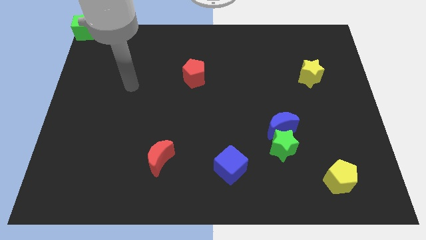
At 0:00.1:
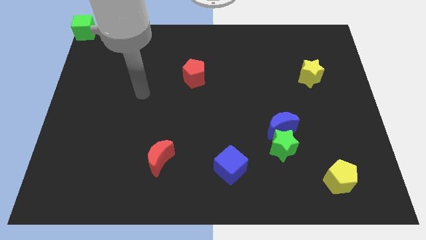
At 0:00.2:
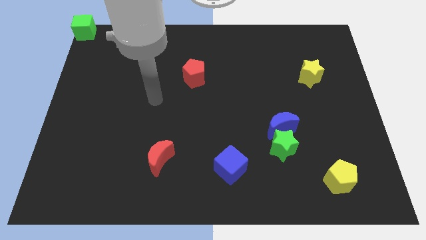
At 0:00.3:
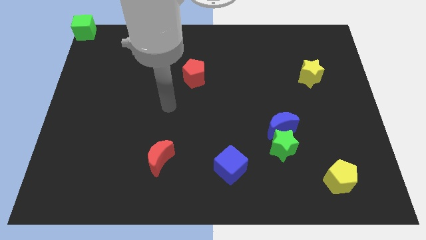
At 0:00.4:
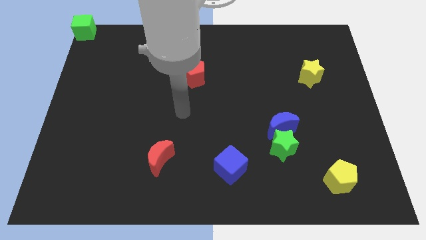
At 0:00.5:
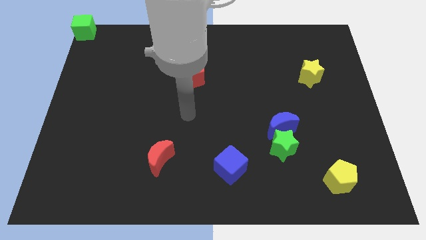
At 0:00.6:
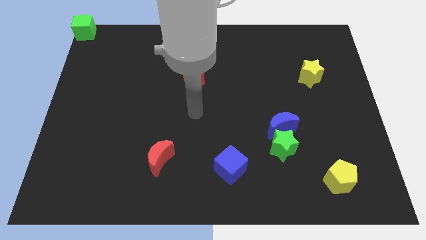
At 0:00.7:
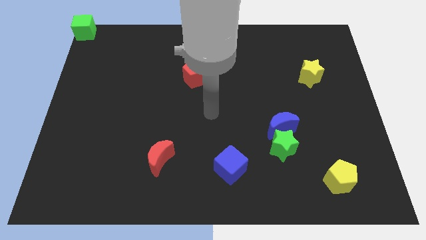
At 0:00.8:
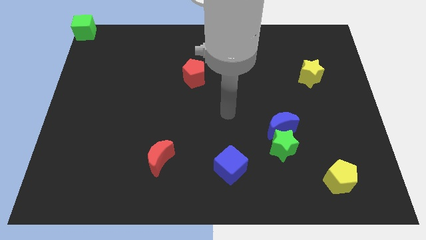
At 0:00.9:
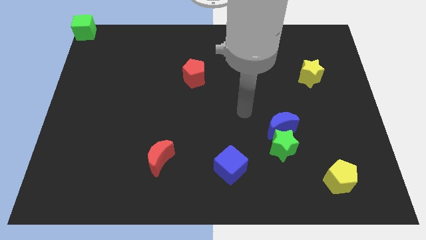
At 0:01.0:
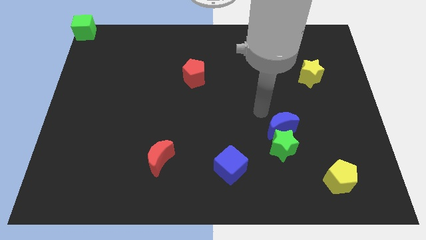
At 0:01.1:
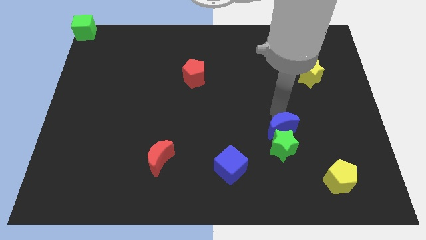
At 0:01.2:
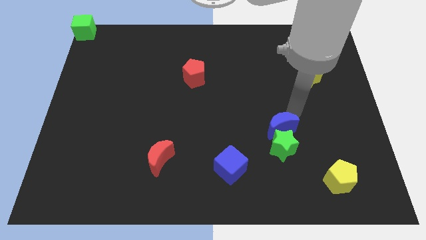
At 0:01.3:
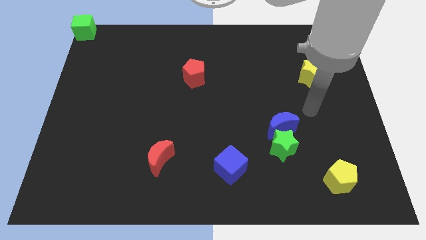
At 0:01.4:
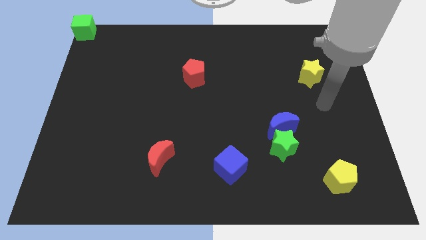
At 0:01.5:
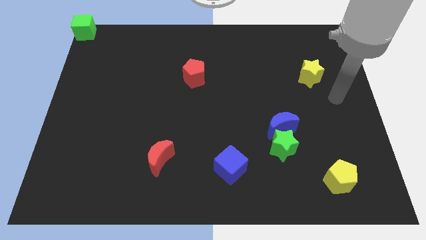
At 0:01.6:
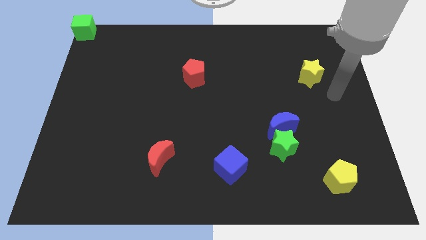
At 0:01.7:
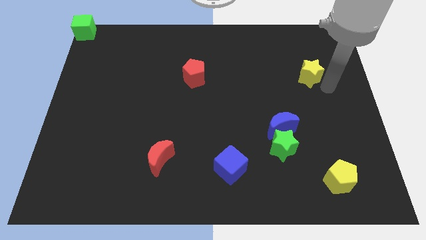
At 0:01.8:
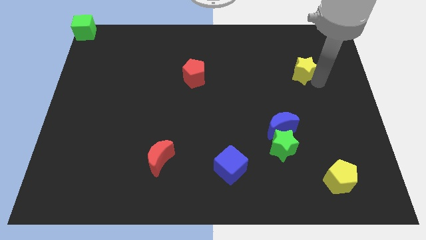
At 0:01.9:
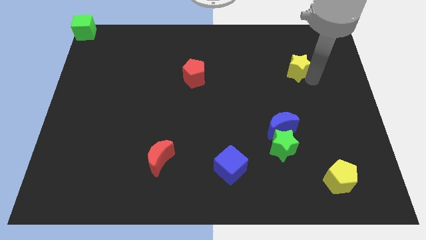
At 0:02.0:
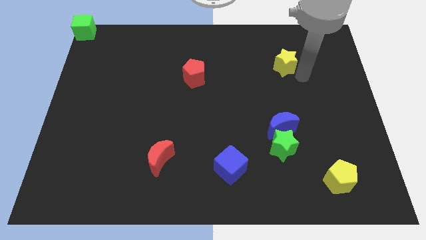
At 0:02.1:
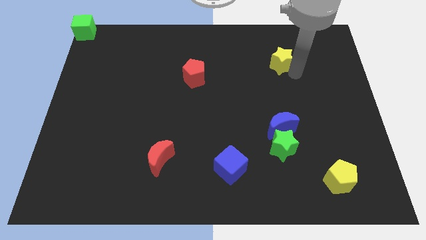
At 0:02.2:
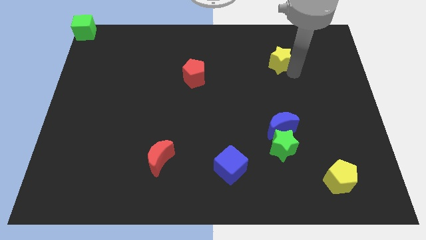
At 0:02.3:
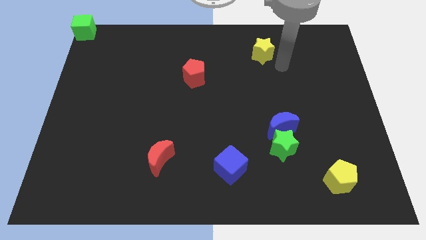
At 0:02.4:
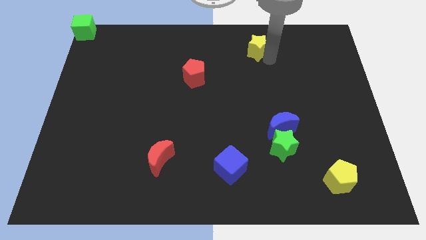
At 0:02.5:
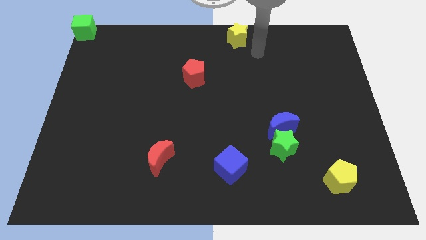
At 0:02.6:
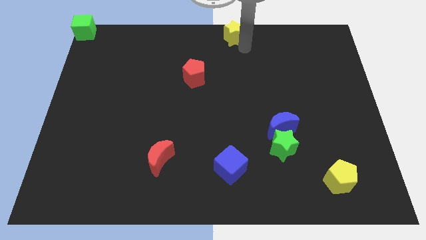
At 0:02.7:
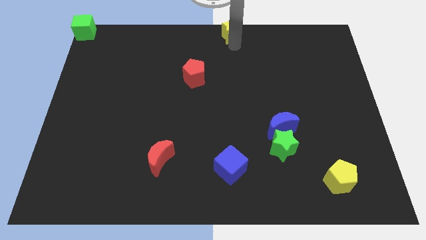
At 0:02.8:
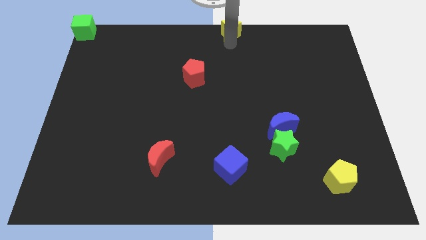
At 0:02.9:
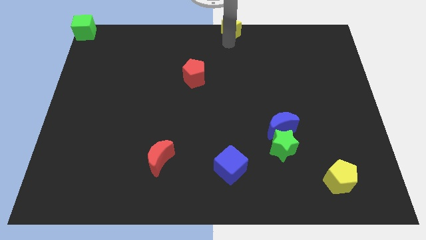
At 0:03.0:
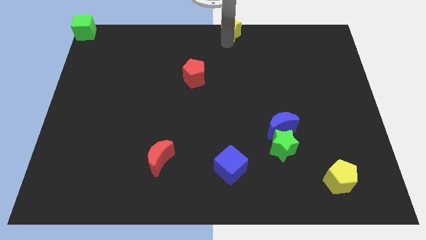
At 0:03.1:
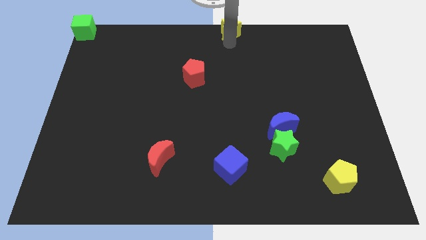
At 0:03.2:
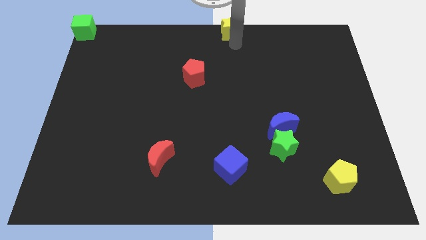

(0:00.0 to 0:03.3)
put the yellow star at the center top

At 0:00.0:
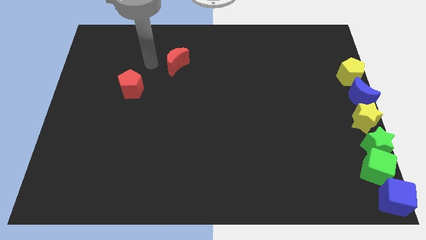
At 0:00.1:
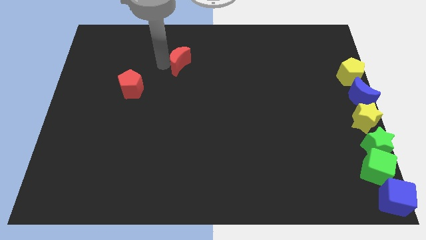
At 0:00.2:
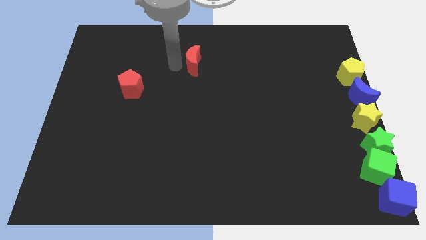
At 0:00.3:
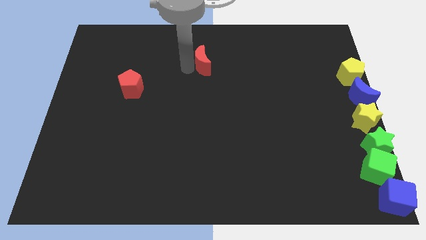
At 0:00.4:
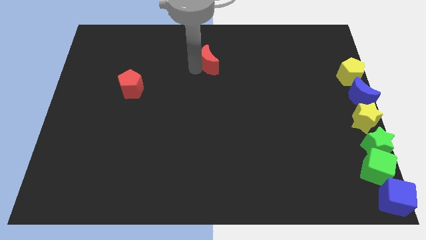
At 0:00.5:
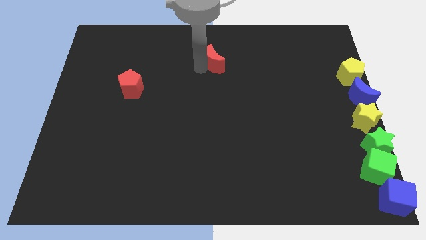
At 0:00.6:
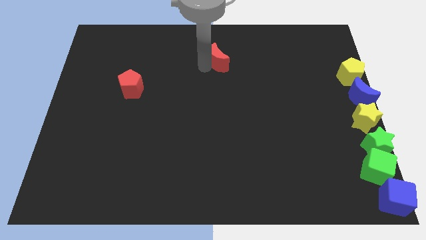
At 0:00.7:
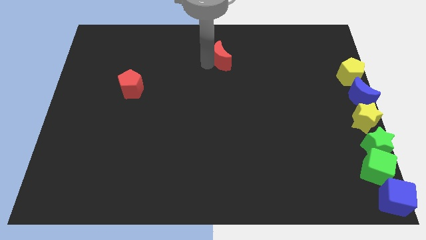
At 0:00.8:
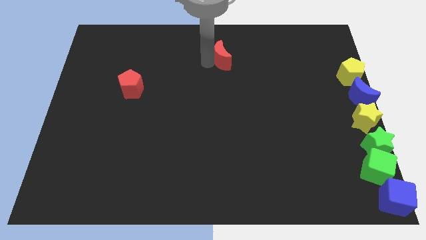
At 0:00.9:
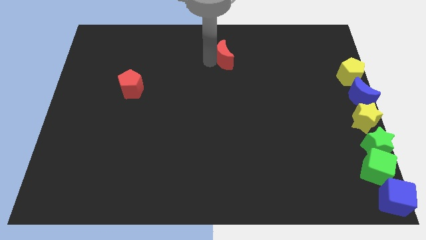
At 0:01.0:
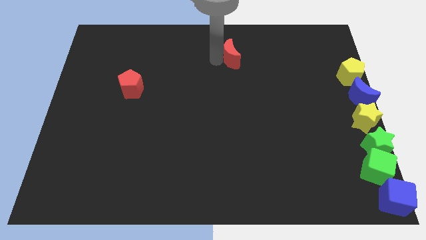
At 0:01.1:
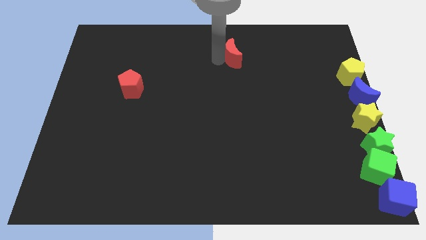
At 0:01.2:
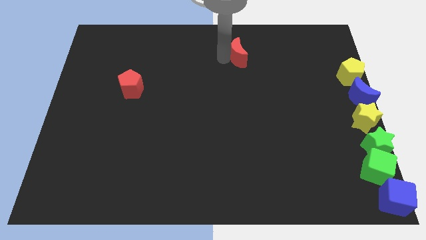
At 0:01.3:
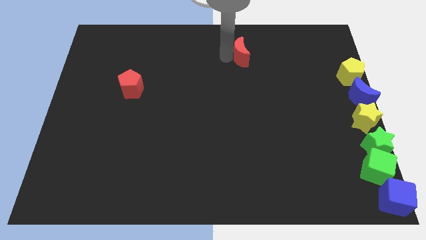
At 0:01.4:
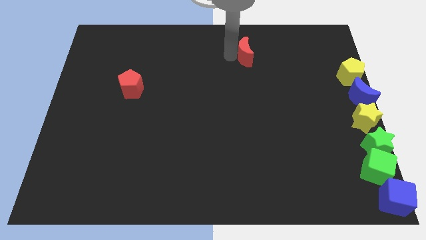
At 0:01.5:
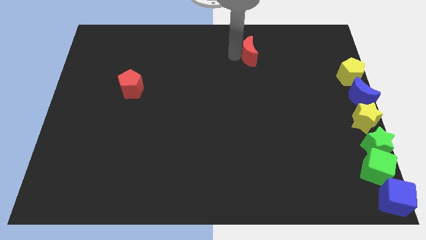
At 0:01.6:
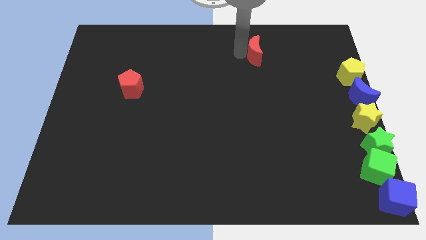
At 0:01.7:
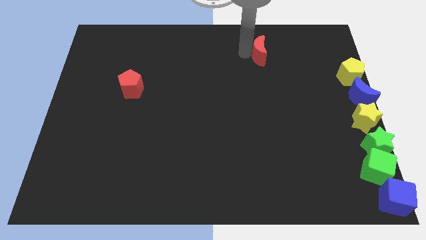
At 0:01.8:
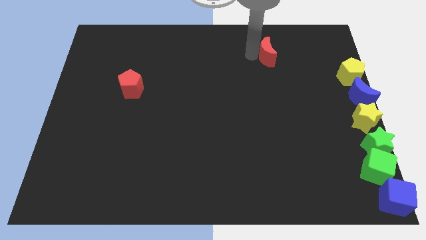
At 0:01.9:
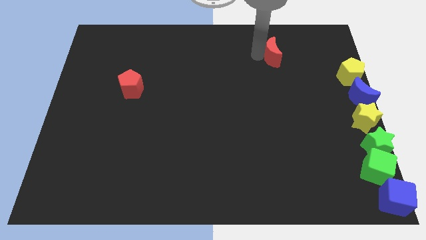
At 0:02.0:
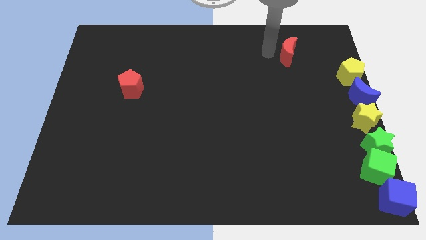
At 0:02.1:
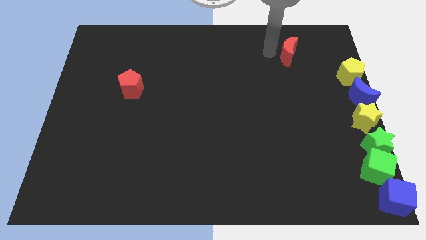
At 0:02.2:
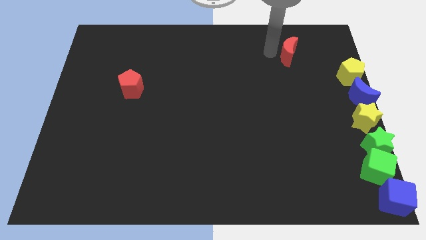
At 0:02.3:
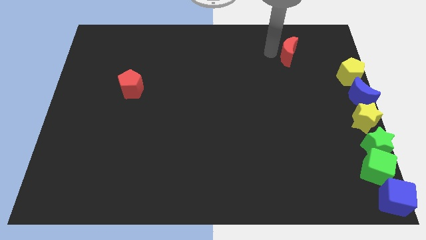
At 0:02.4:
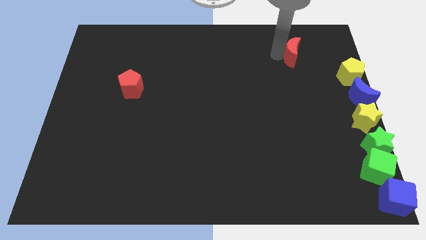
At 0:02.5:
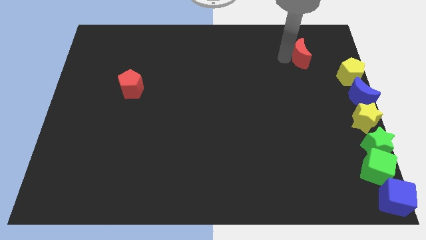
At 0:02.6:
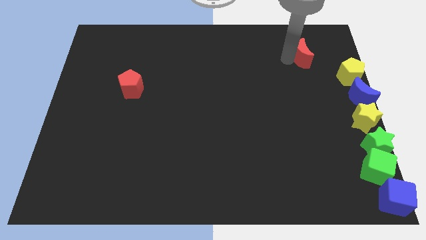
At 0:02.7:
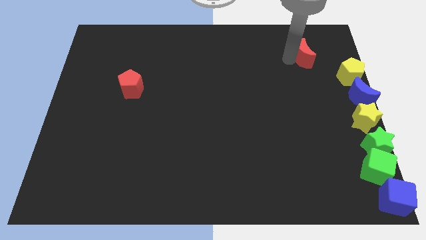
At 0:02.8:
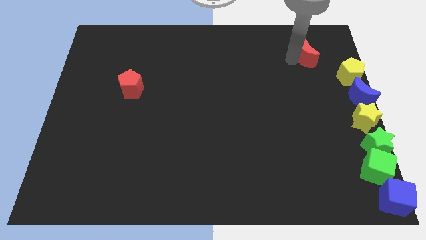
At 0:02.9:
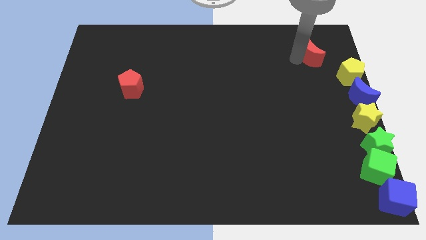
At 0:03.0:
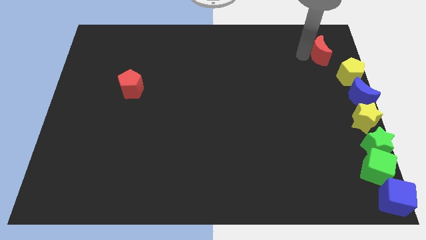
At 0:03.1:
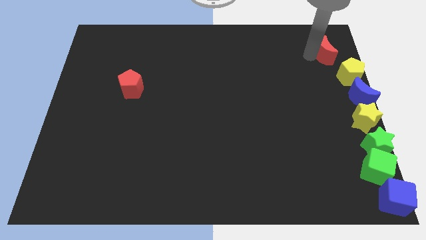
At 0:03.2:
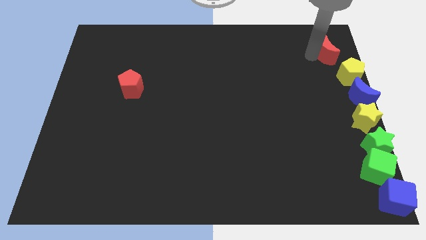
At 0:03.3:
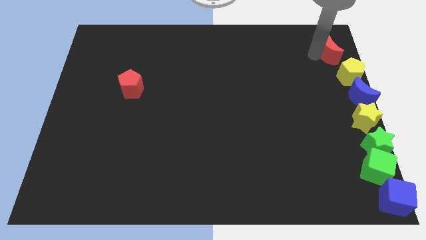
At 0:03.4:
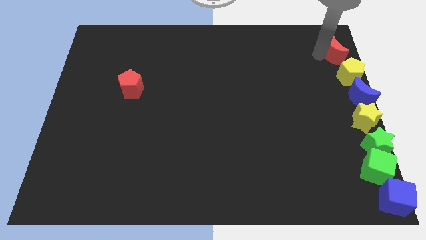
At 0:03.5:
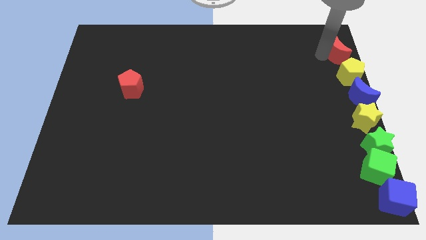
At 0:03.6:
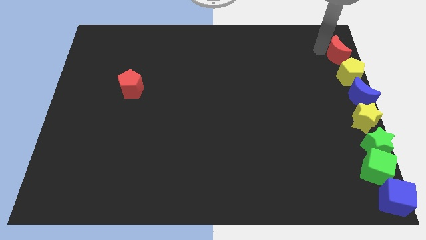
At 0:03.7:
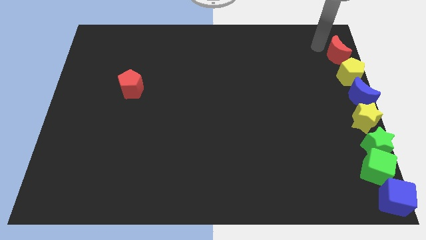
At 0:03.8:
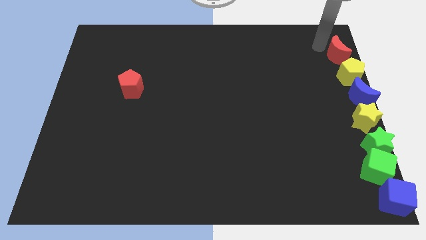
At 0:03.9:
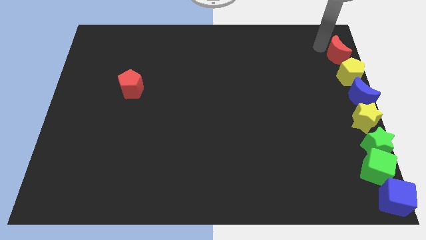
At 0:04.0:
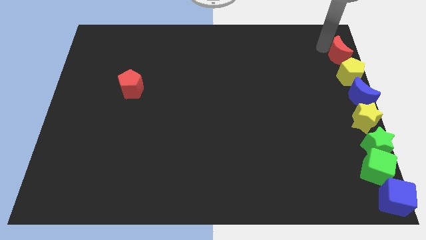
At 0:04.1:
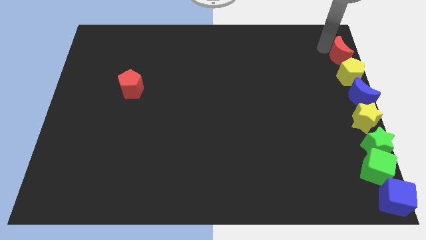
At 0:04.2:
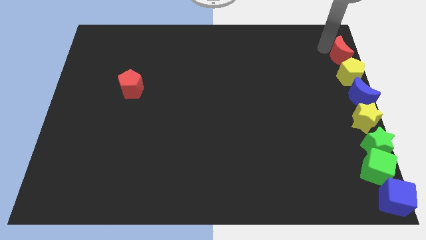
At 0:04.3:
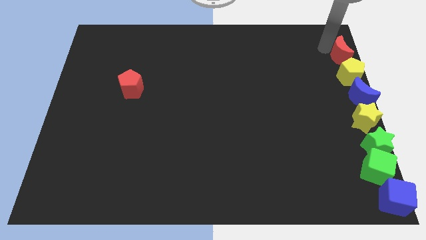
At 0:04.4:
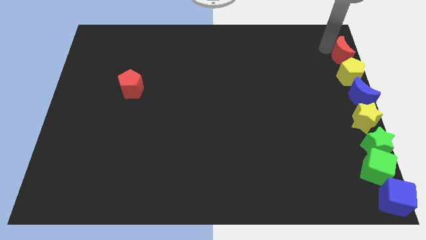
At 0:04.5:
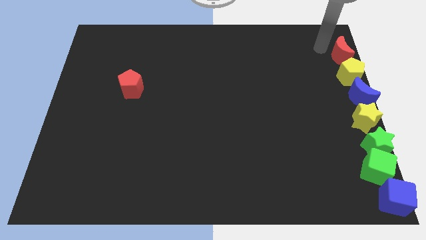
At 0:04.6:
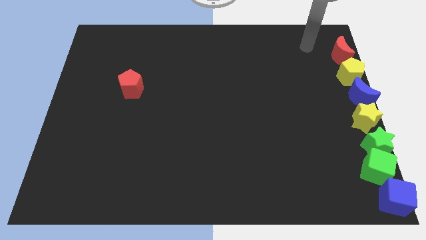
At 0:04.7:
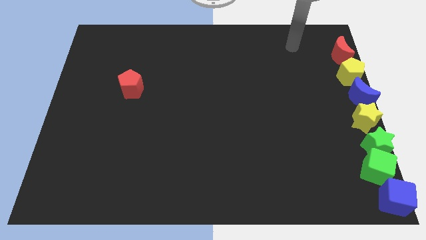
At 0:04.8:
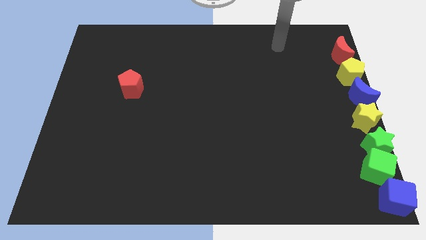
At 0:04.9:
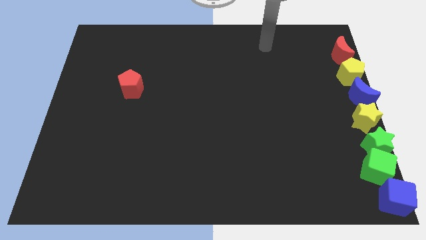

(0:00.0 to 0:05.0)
move the red moon to the top of the yellow pentagon

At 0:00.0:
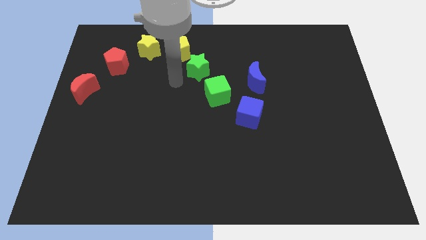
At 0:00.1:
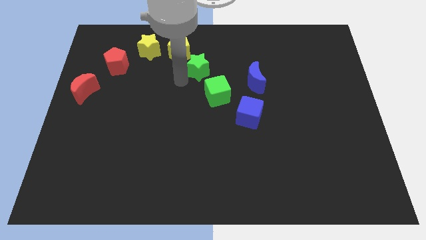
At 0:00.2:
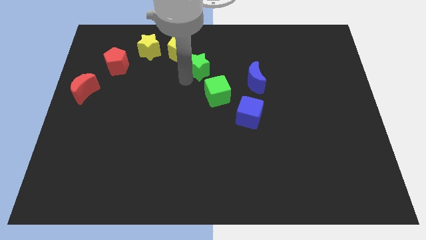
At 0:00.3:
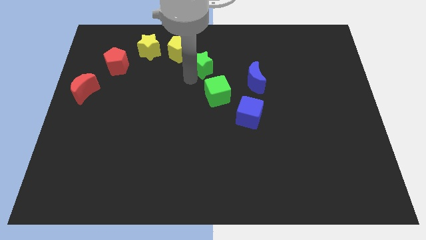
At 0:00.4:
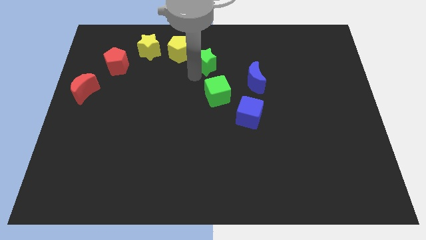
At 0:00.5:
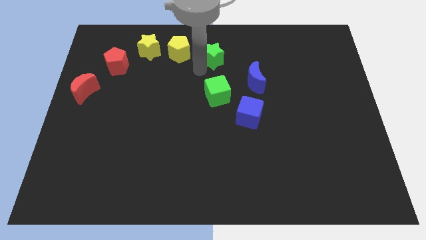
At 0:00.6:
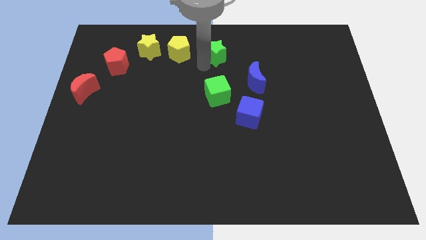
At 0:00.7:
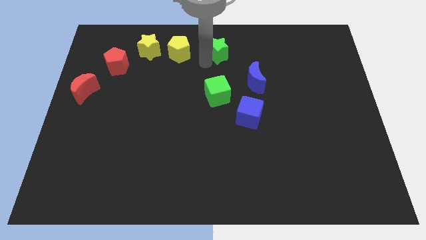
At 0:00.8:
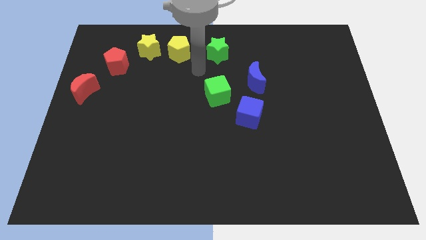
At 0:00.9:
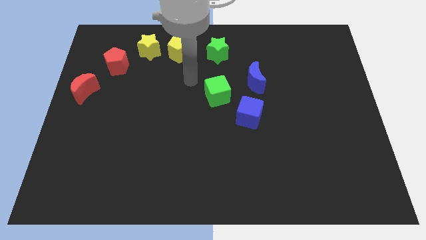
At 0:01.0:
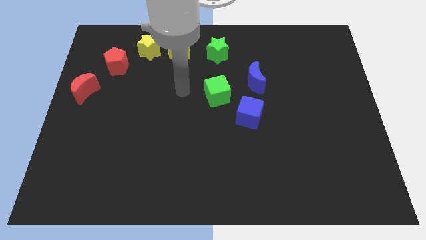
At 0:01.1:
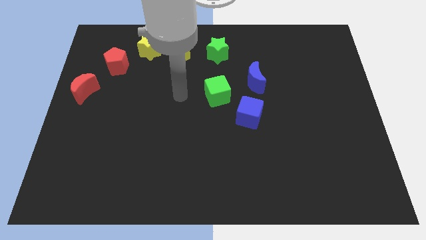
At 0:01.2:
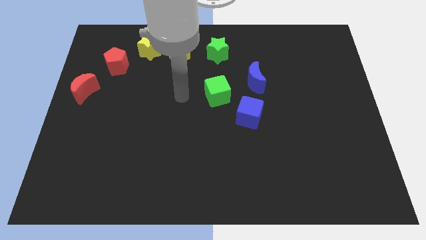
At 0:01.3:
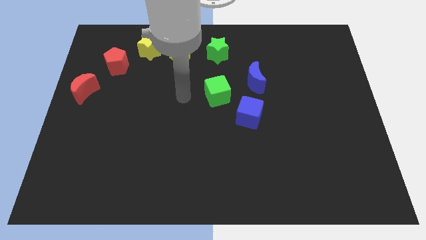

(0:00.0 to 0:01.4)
move the green star to the right of the yellow pentagon
